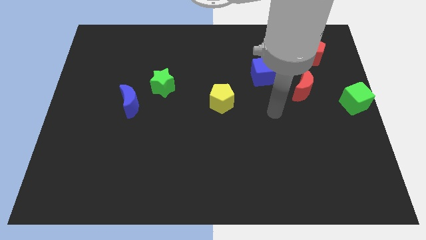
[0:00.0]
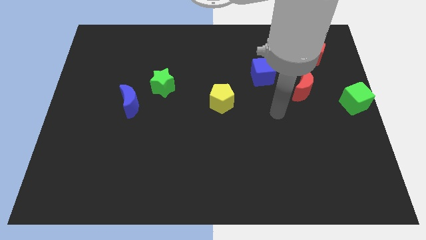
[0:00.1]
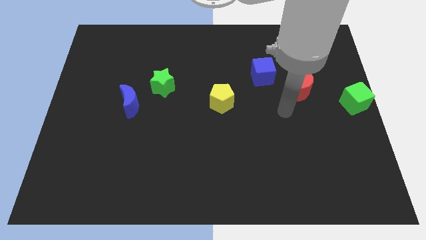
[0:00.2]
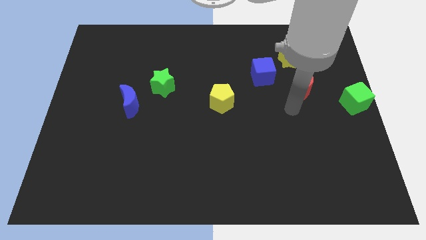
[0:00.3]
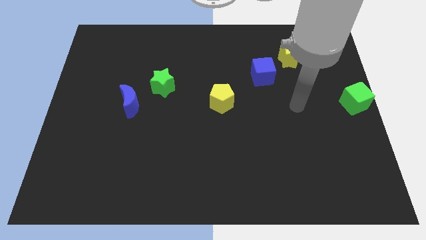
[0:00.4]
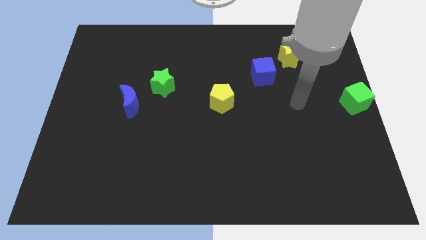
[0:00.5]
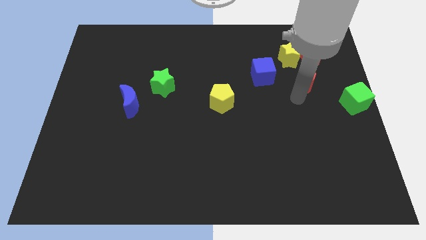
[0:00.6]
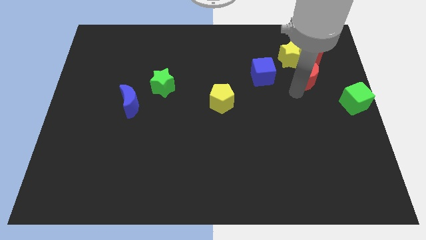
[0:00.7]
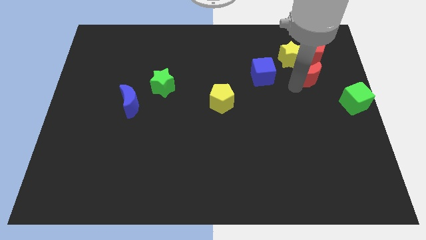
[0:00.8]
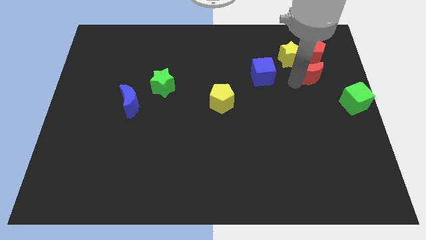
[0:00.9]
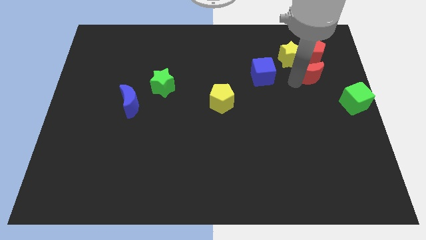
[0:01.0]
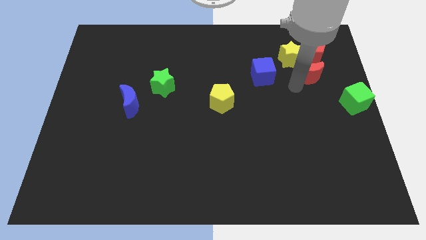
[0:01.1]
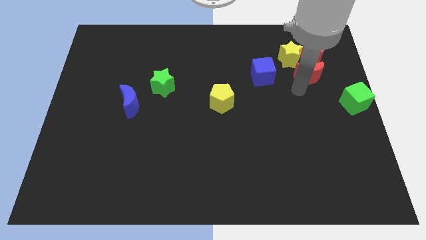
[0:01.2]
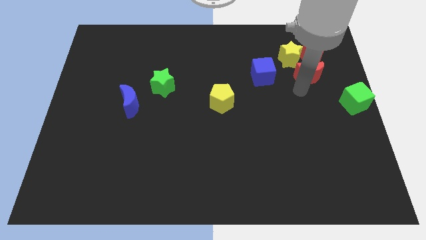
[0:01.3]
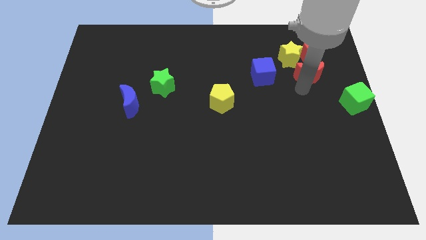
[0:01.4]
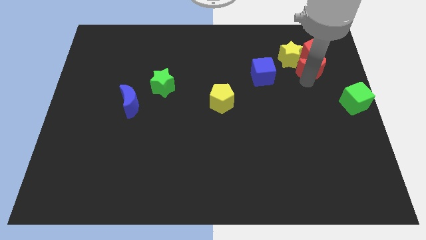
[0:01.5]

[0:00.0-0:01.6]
put the red moon below the red pentagon

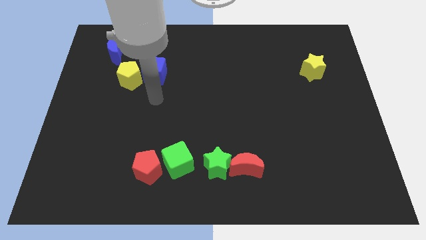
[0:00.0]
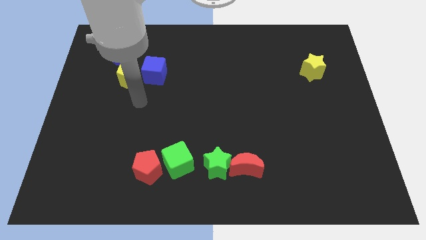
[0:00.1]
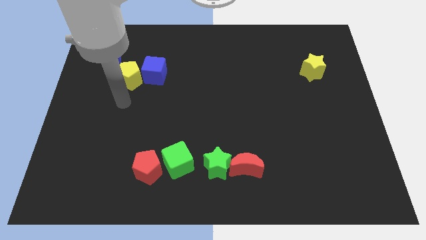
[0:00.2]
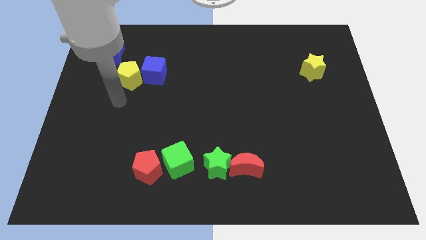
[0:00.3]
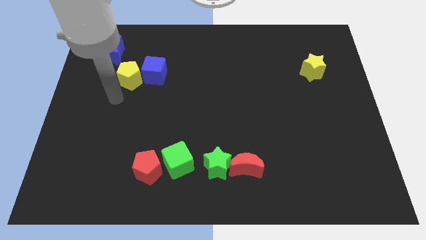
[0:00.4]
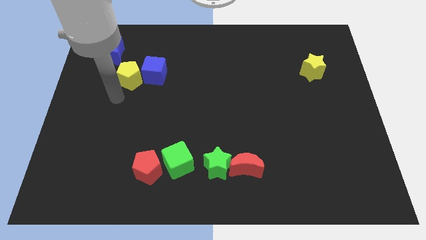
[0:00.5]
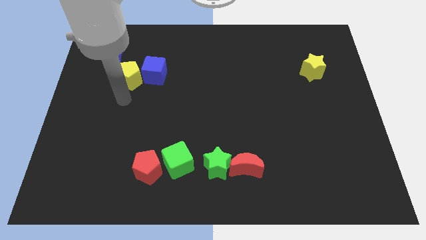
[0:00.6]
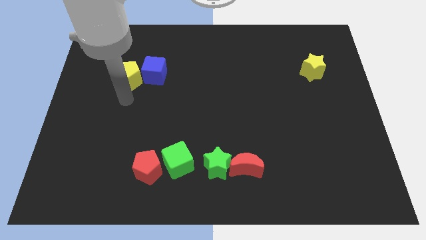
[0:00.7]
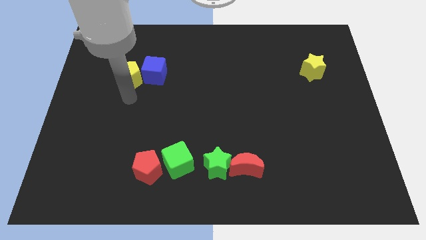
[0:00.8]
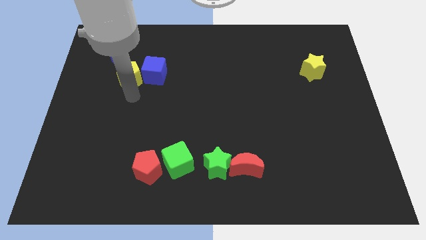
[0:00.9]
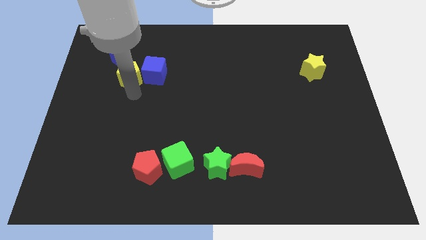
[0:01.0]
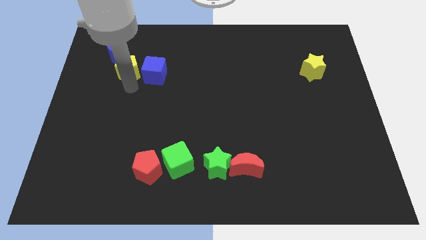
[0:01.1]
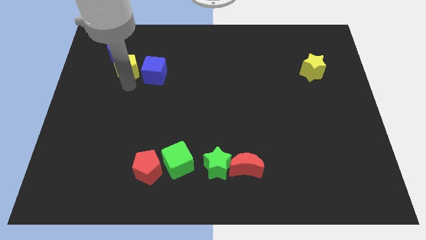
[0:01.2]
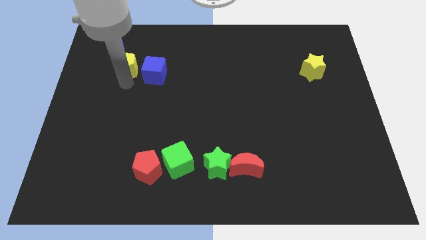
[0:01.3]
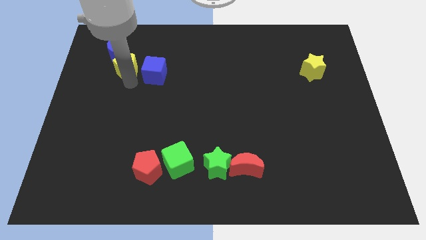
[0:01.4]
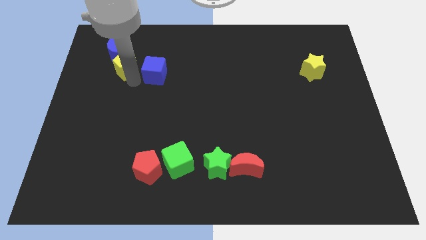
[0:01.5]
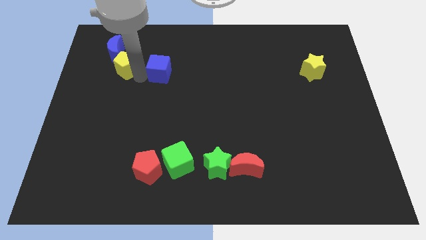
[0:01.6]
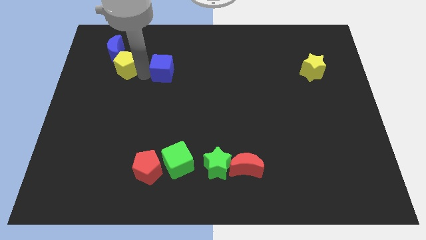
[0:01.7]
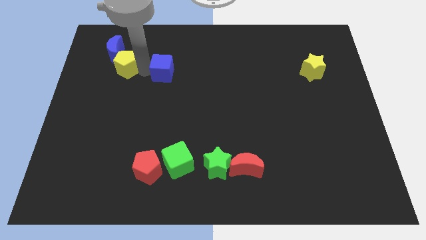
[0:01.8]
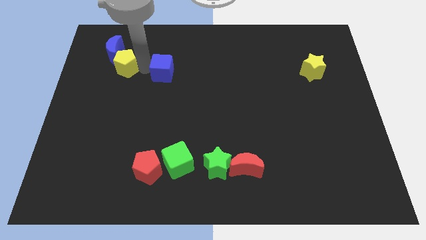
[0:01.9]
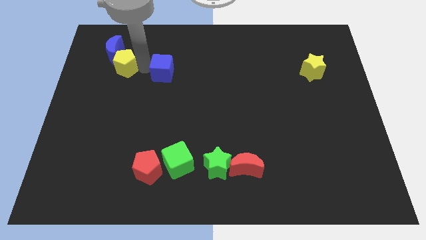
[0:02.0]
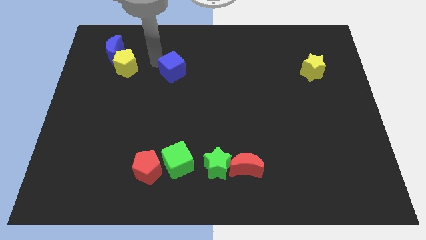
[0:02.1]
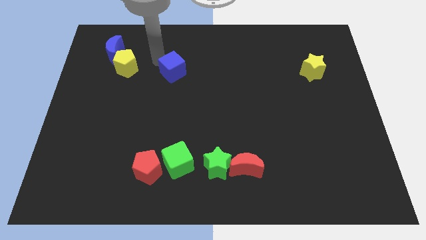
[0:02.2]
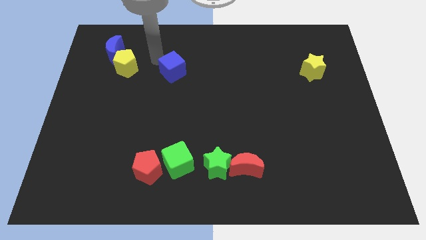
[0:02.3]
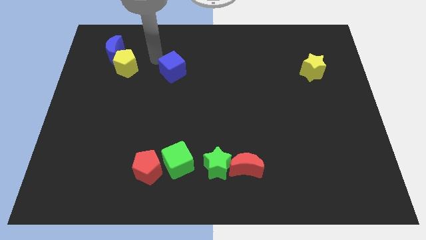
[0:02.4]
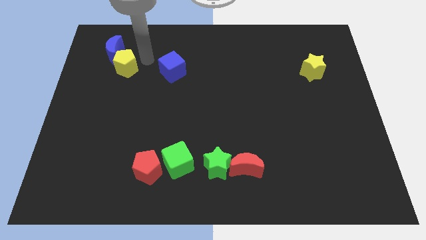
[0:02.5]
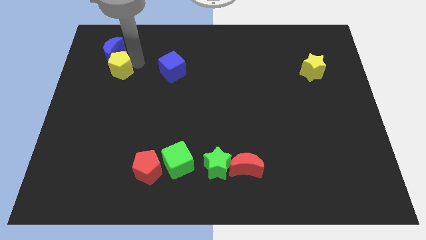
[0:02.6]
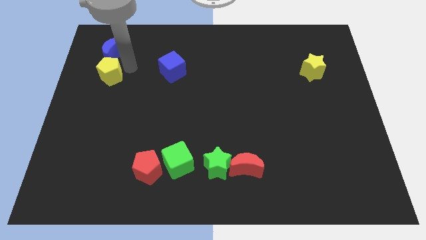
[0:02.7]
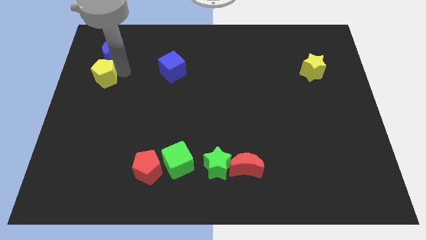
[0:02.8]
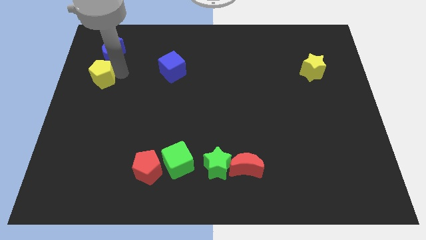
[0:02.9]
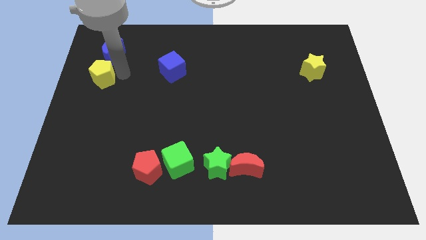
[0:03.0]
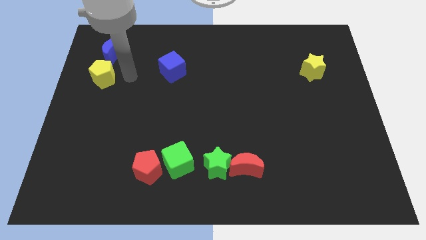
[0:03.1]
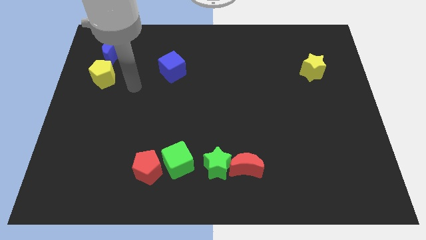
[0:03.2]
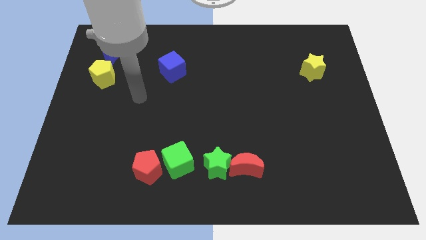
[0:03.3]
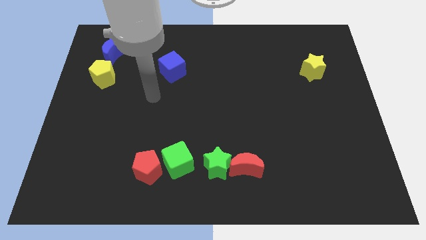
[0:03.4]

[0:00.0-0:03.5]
push the yellow pentagon bottom of the blue crescent

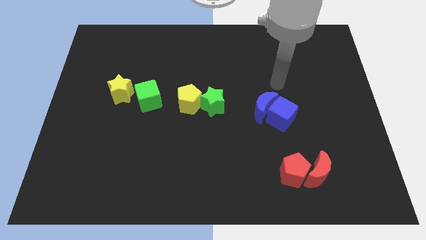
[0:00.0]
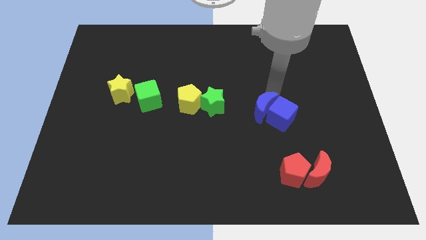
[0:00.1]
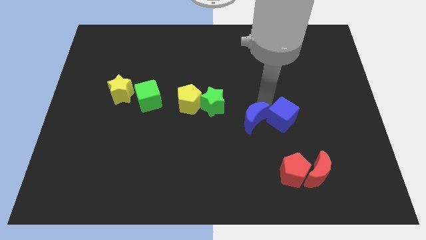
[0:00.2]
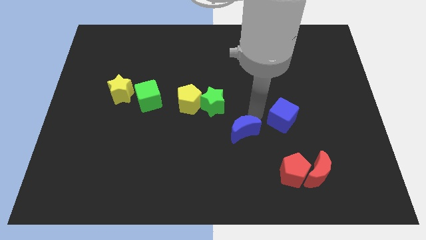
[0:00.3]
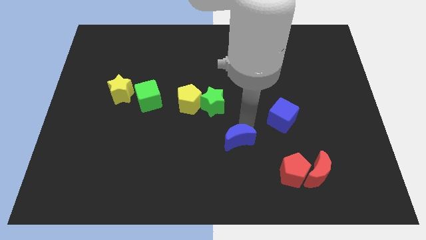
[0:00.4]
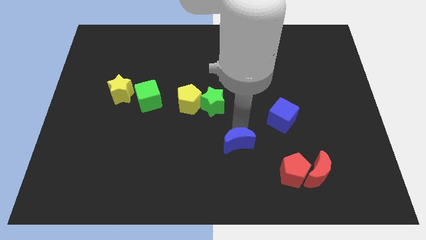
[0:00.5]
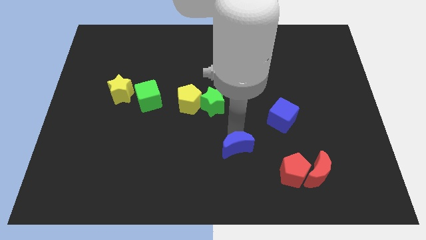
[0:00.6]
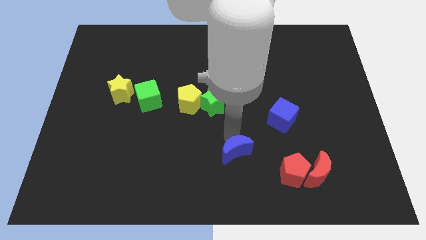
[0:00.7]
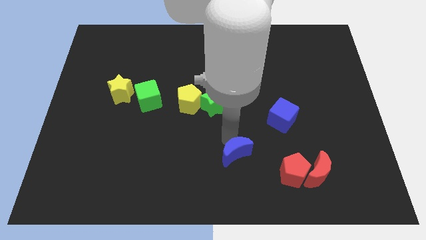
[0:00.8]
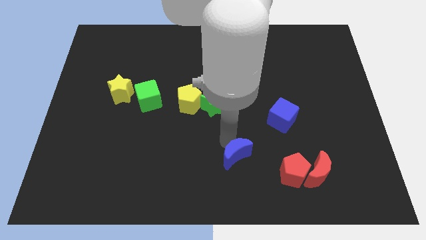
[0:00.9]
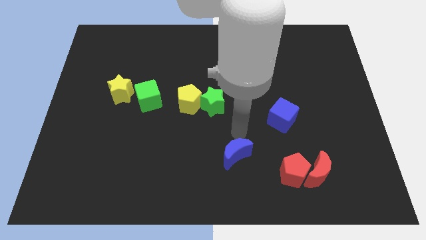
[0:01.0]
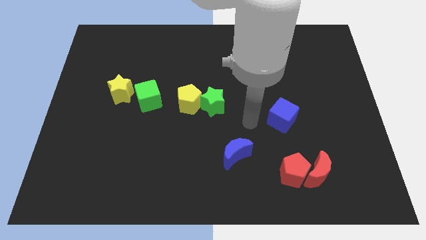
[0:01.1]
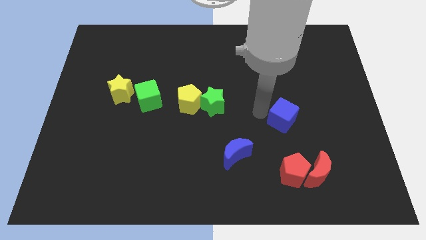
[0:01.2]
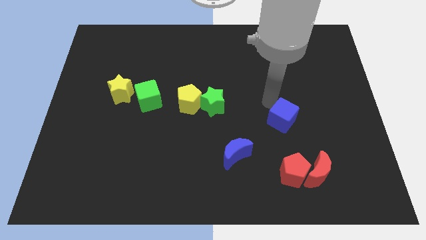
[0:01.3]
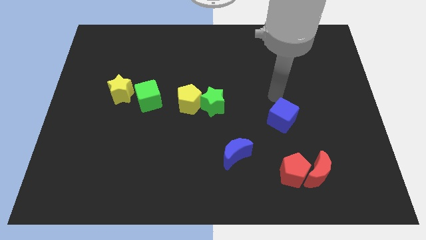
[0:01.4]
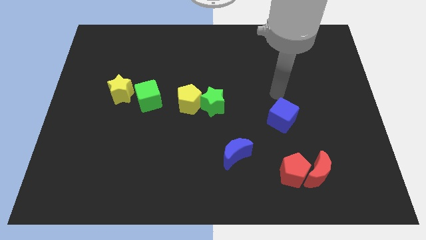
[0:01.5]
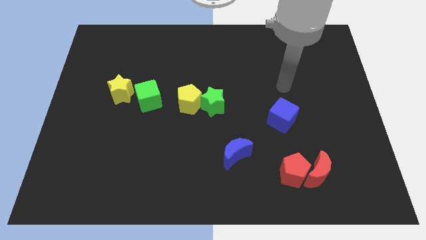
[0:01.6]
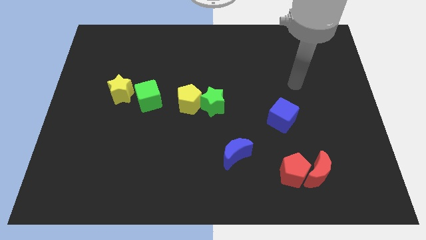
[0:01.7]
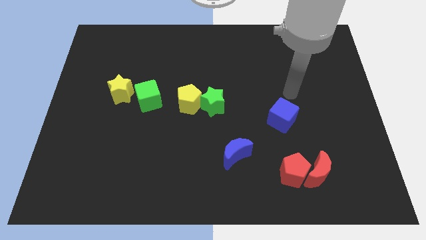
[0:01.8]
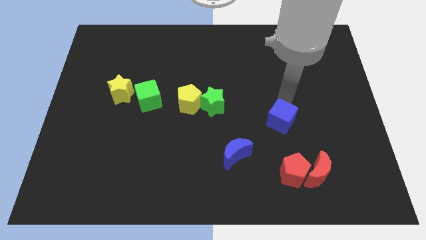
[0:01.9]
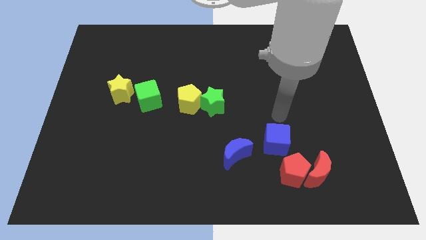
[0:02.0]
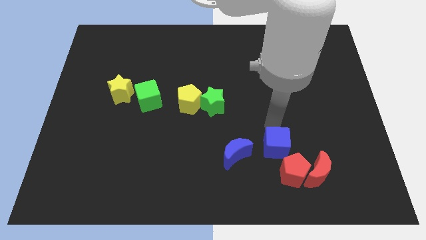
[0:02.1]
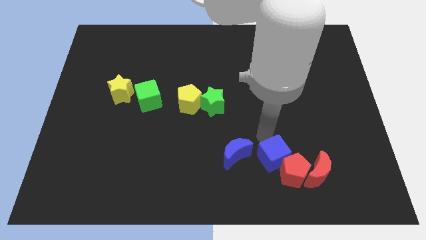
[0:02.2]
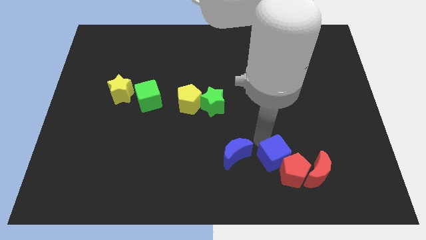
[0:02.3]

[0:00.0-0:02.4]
push the blue blocks towards the bottom center of the board

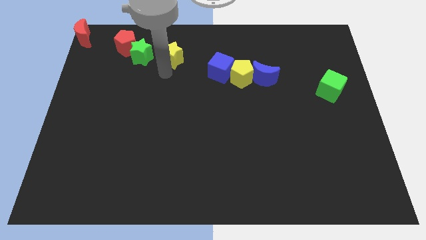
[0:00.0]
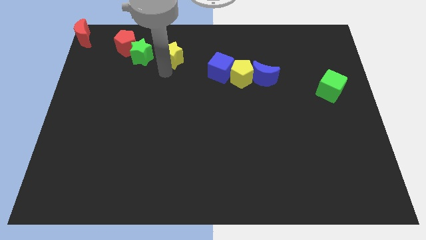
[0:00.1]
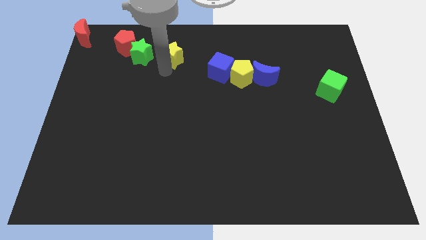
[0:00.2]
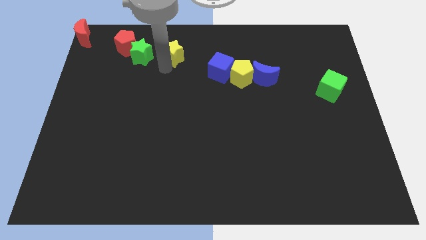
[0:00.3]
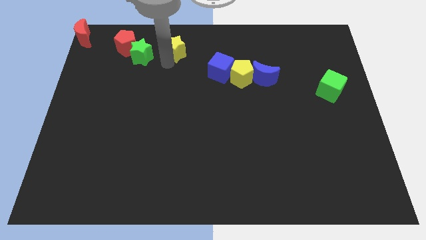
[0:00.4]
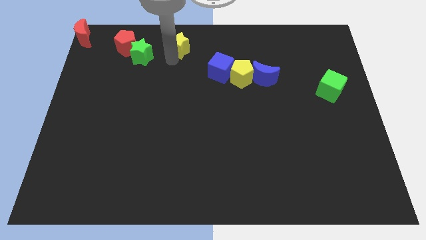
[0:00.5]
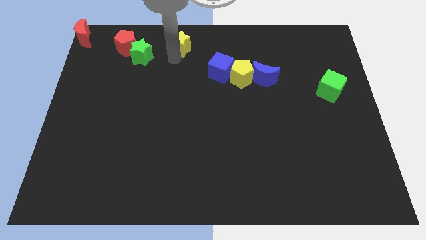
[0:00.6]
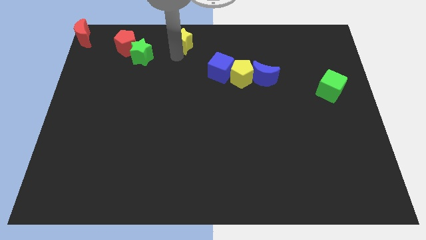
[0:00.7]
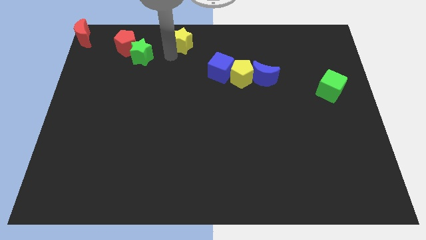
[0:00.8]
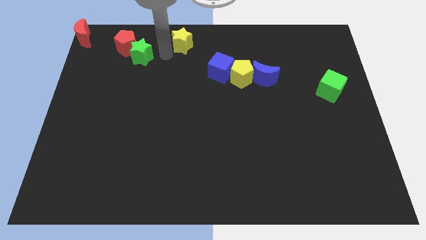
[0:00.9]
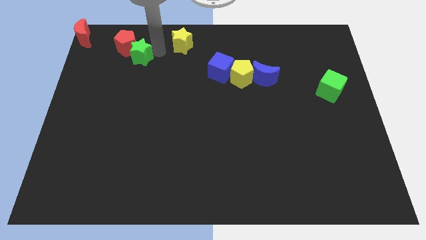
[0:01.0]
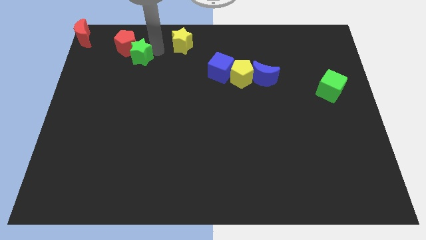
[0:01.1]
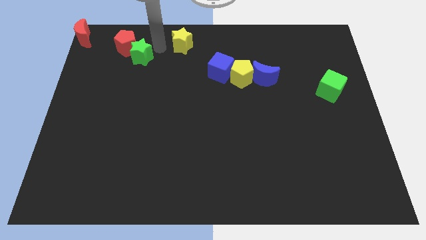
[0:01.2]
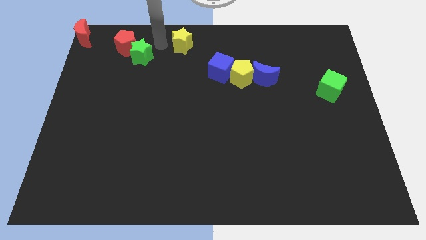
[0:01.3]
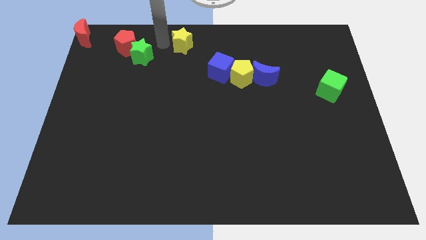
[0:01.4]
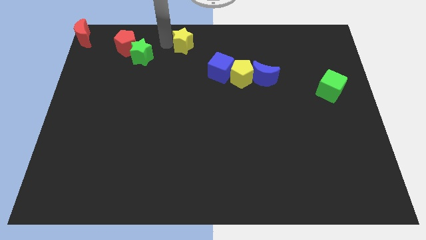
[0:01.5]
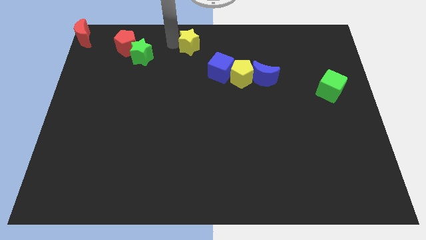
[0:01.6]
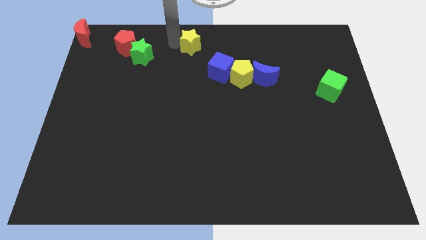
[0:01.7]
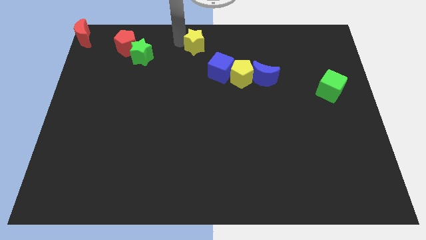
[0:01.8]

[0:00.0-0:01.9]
place the yellow star to the top center of the board
